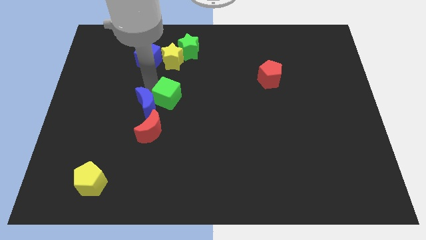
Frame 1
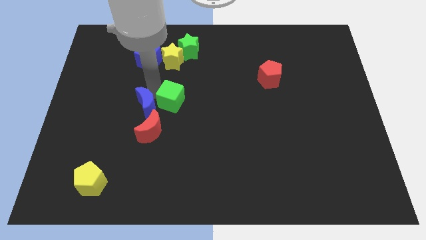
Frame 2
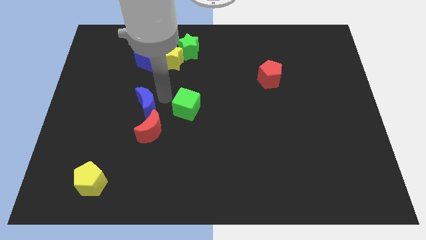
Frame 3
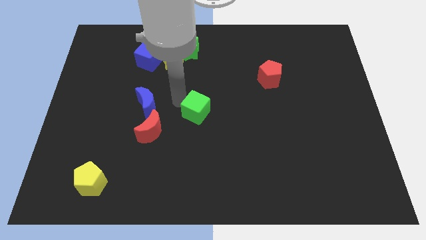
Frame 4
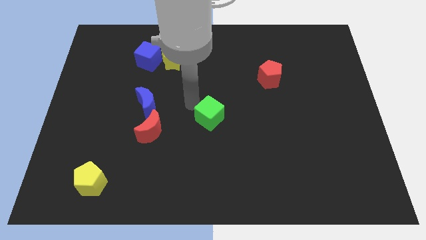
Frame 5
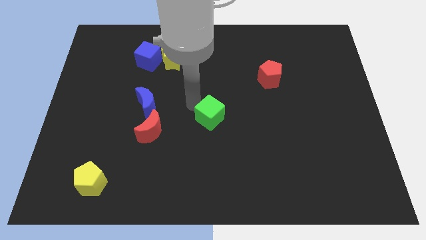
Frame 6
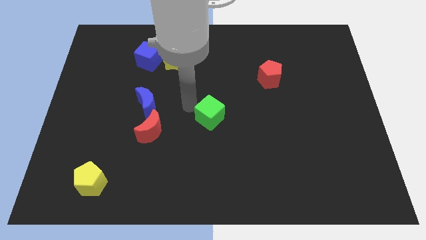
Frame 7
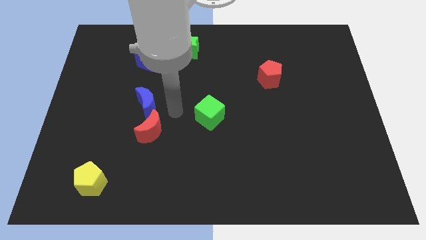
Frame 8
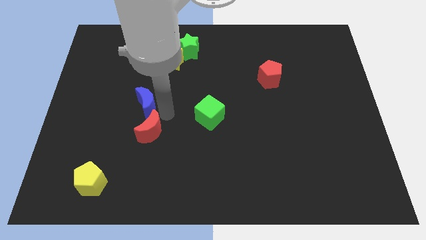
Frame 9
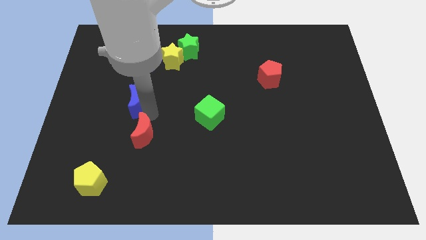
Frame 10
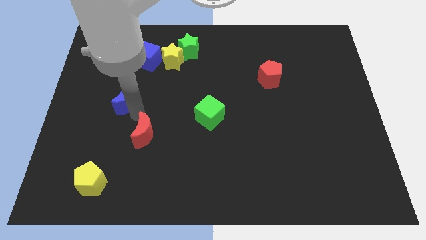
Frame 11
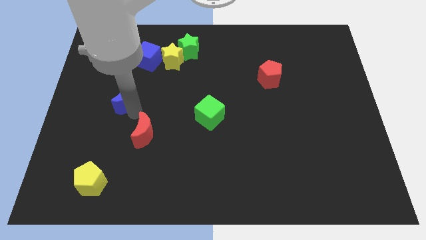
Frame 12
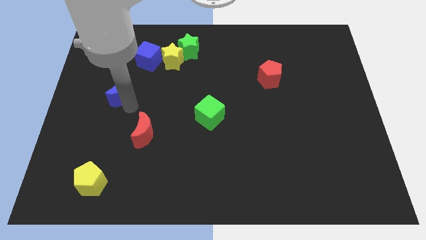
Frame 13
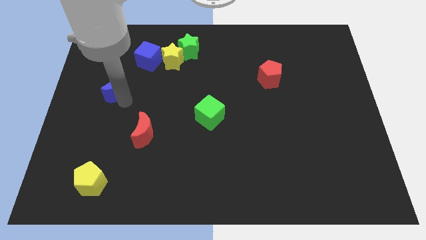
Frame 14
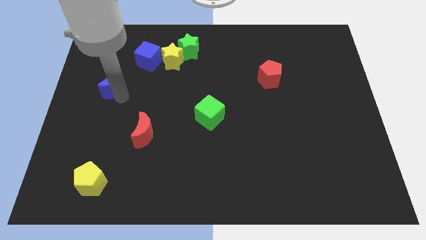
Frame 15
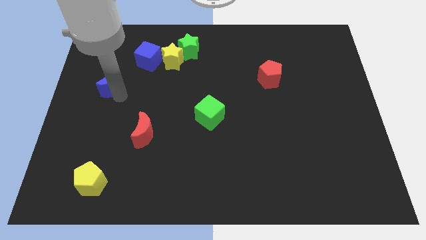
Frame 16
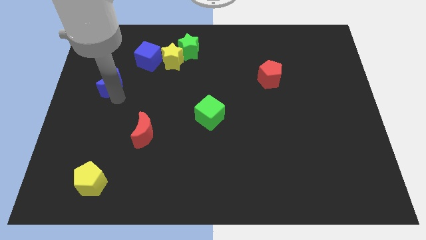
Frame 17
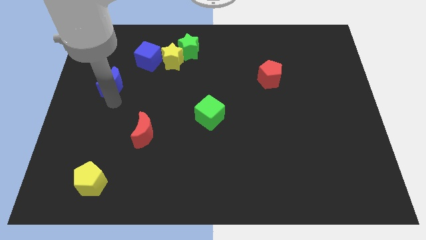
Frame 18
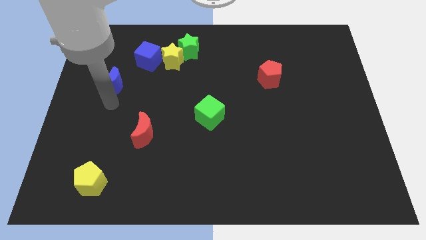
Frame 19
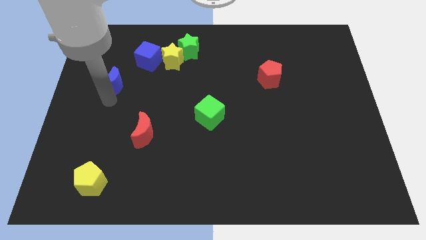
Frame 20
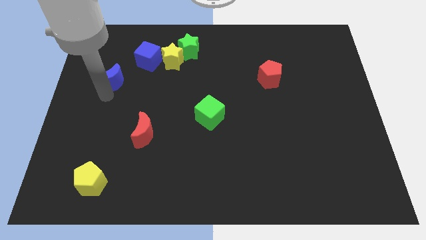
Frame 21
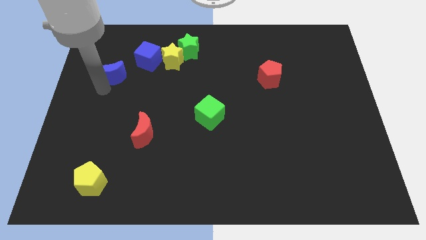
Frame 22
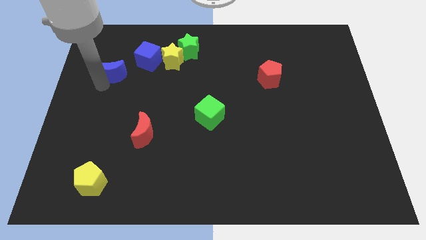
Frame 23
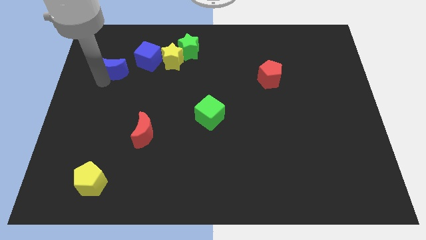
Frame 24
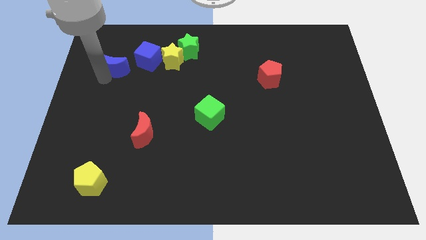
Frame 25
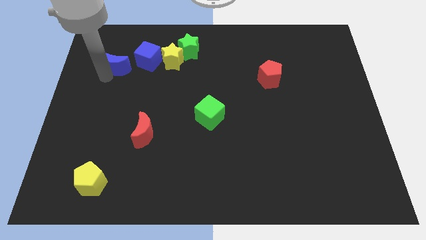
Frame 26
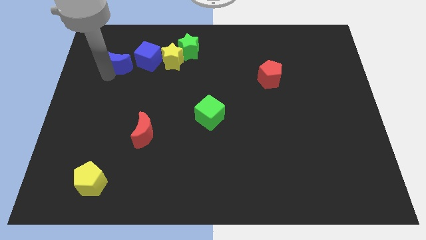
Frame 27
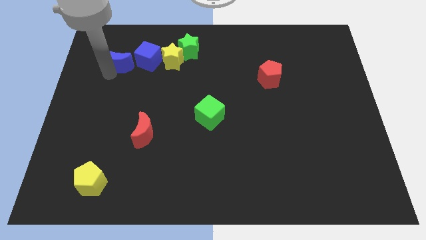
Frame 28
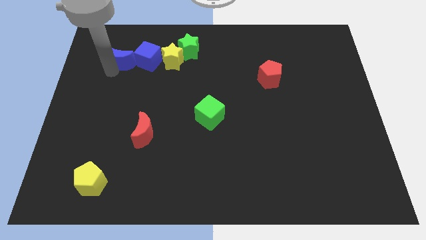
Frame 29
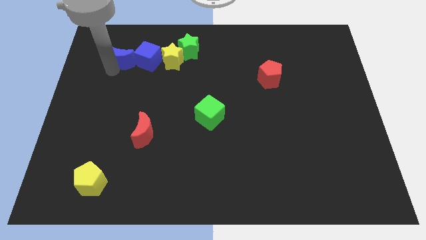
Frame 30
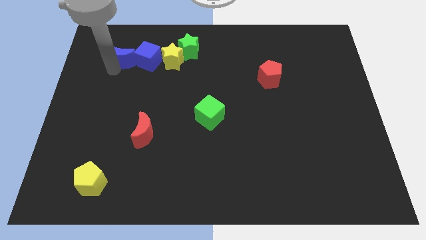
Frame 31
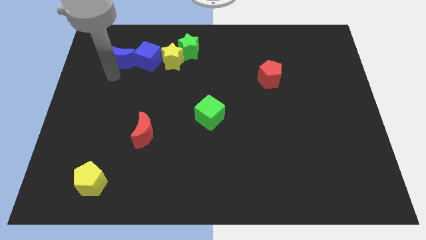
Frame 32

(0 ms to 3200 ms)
place blue crescent beside blue cube

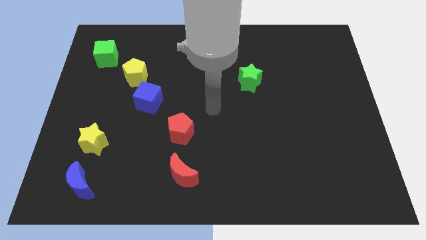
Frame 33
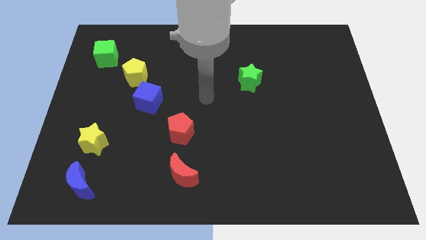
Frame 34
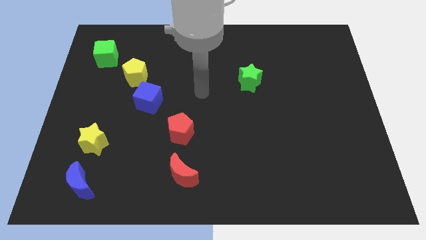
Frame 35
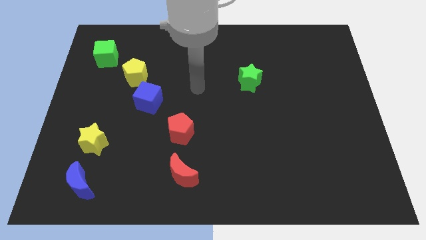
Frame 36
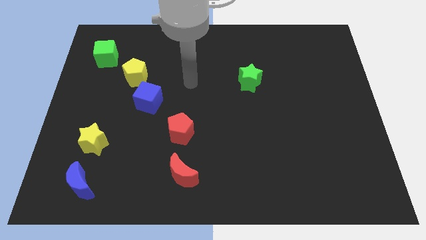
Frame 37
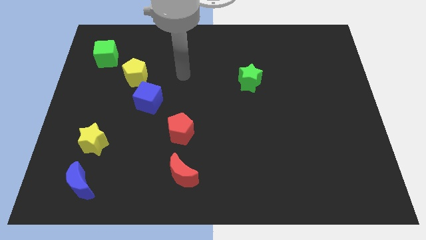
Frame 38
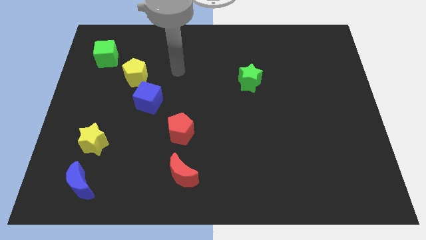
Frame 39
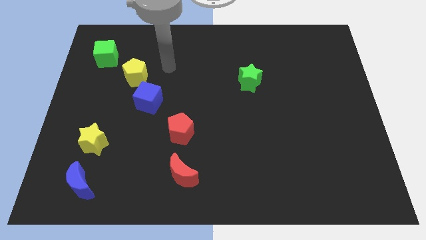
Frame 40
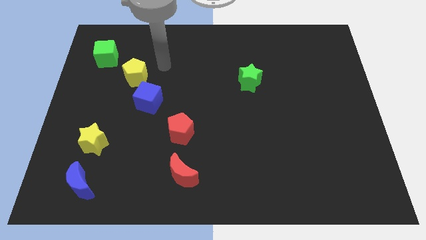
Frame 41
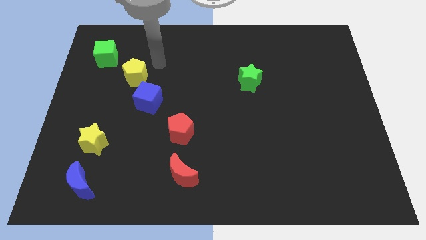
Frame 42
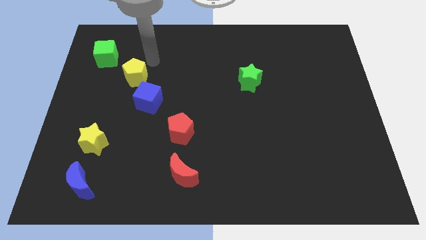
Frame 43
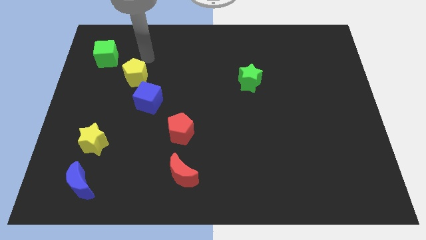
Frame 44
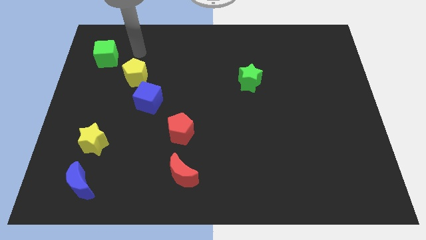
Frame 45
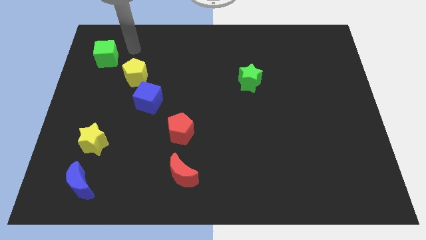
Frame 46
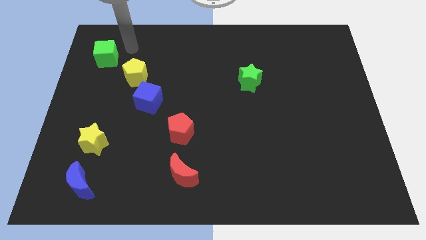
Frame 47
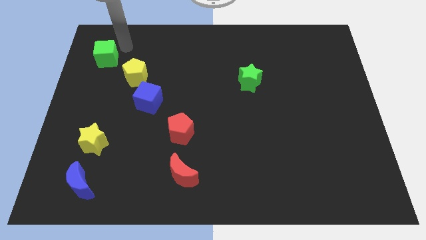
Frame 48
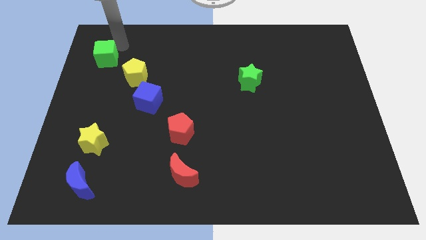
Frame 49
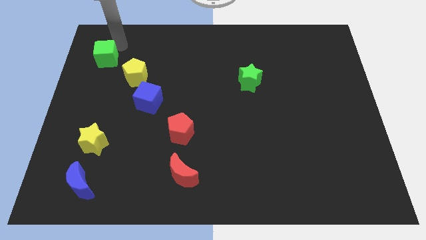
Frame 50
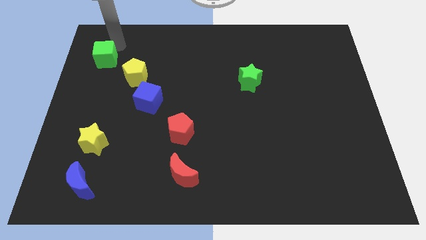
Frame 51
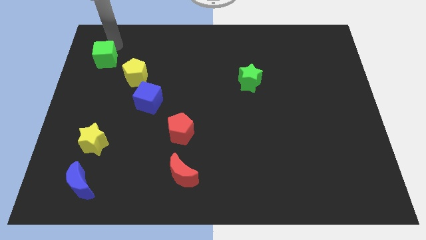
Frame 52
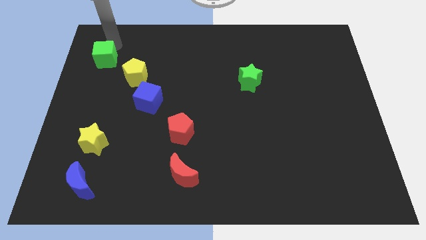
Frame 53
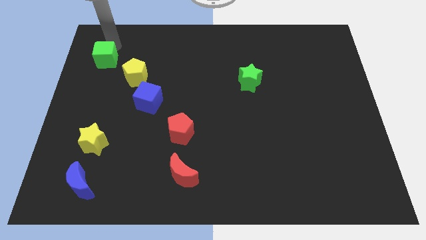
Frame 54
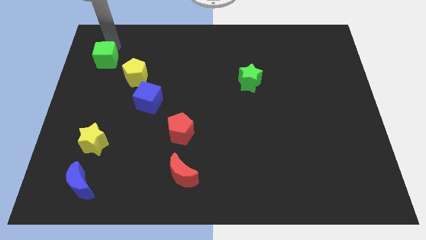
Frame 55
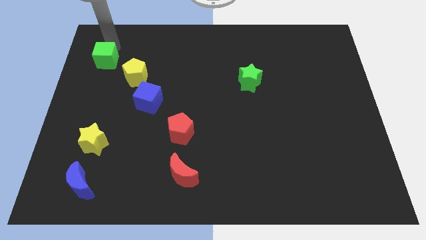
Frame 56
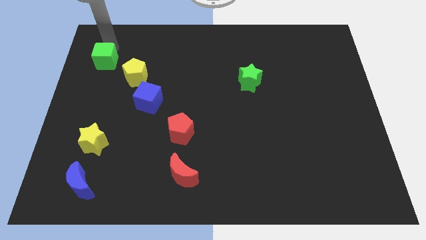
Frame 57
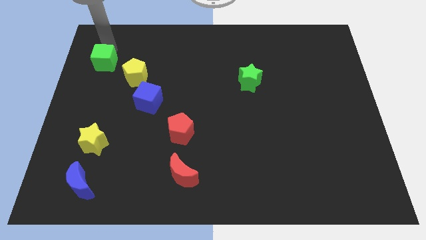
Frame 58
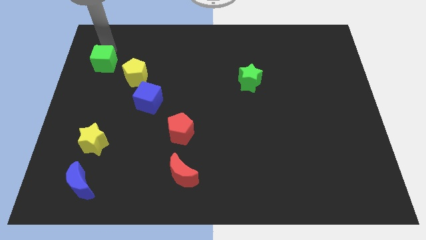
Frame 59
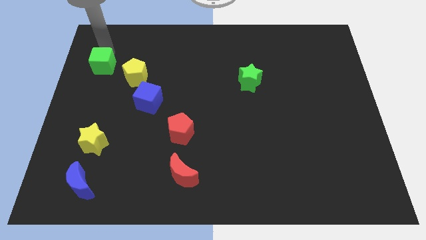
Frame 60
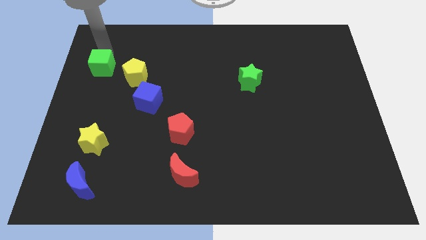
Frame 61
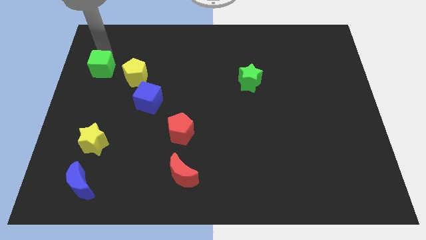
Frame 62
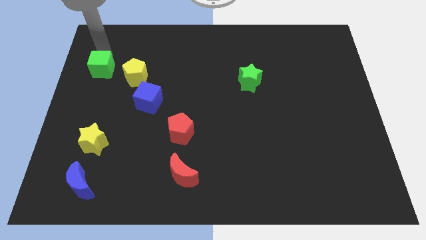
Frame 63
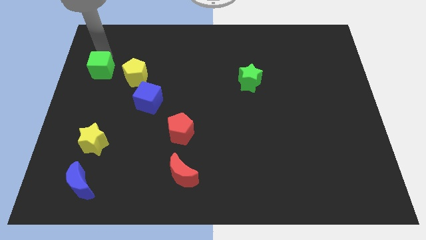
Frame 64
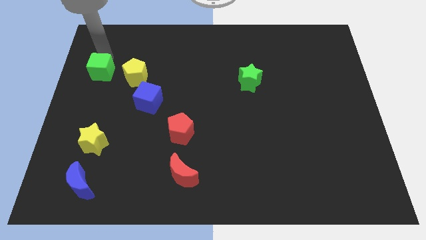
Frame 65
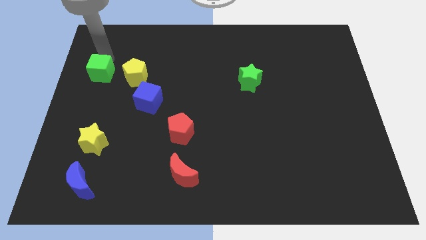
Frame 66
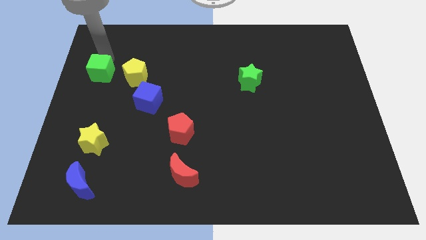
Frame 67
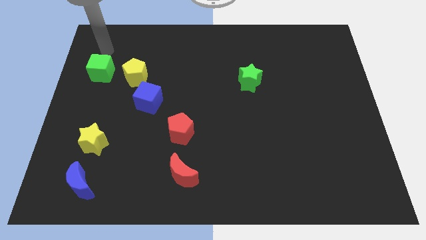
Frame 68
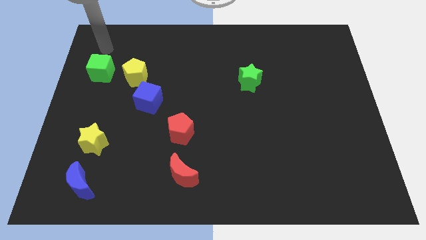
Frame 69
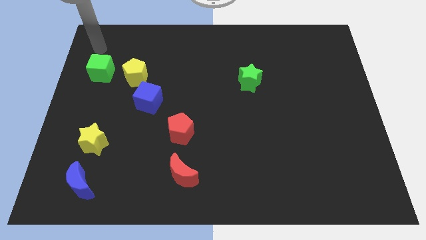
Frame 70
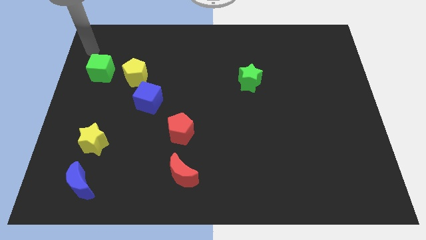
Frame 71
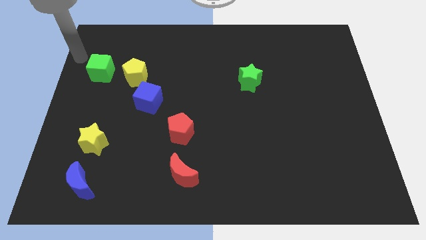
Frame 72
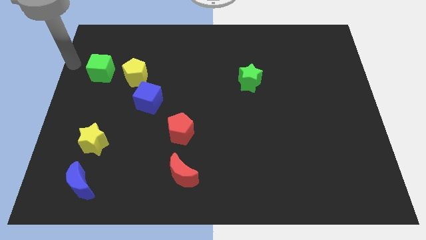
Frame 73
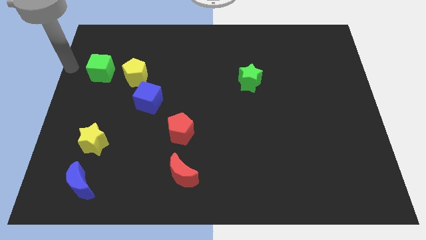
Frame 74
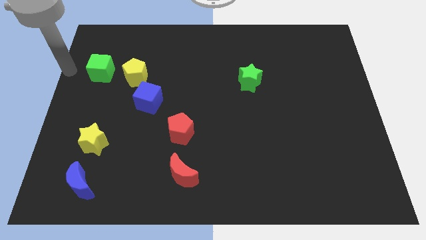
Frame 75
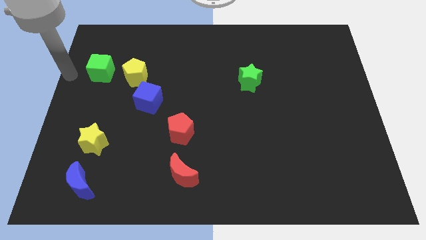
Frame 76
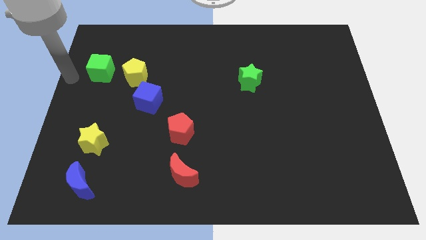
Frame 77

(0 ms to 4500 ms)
move the green cube to the left side of the yellow pentagon

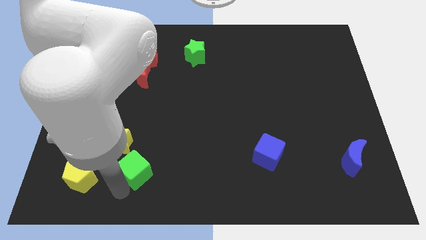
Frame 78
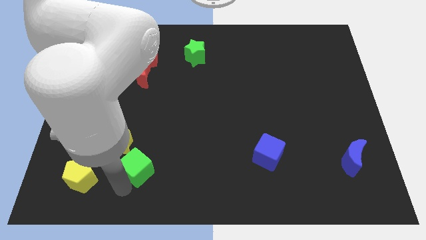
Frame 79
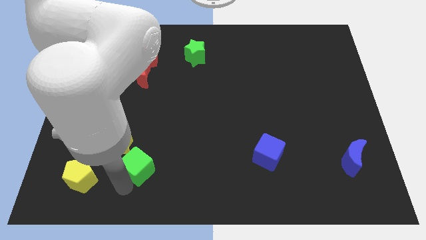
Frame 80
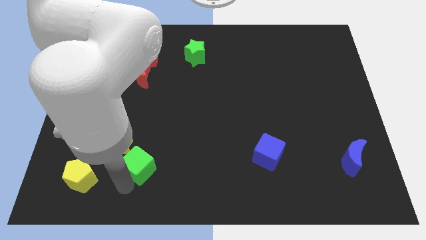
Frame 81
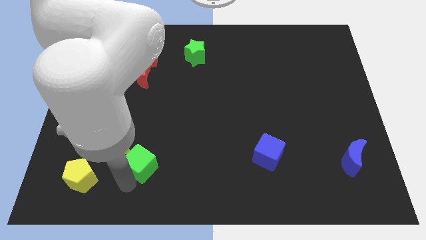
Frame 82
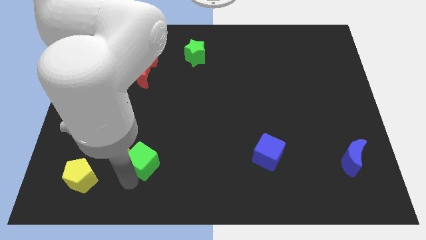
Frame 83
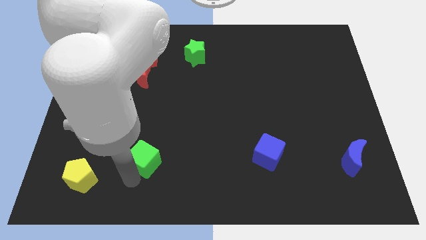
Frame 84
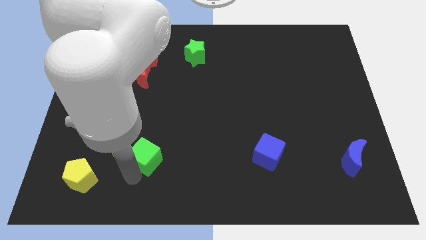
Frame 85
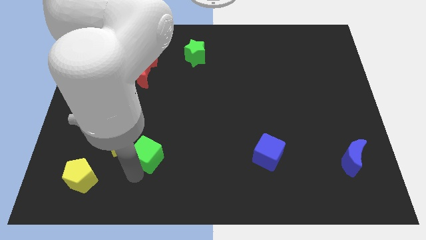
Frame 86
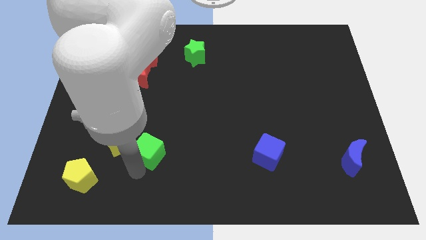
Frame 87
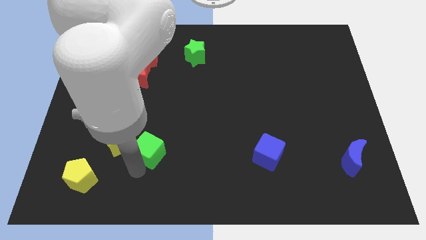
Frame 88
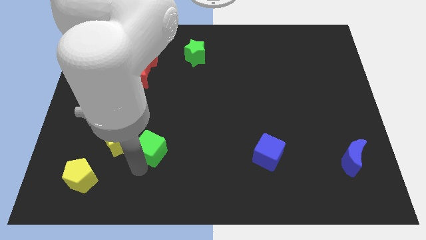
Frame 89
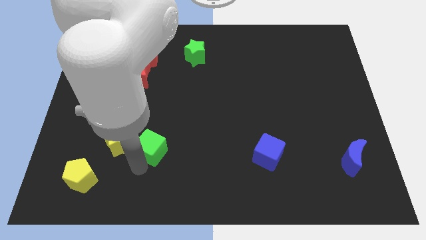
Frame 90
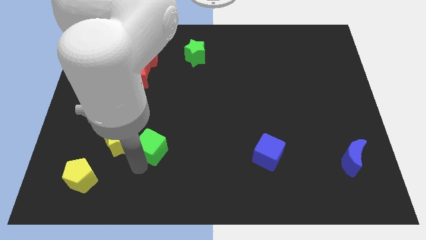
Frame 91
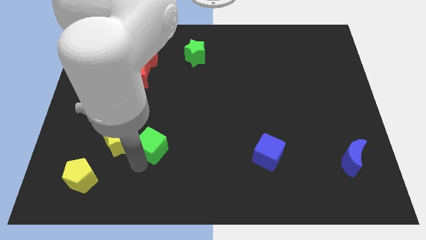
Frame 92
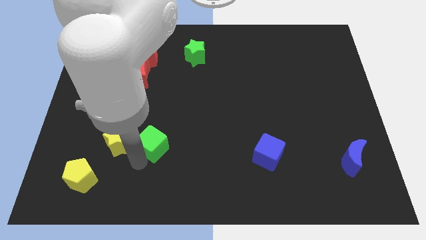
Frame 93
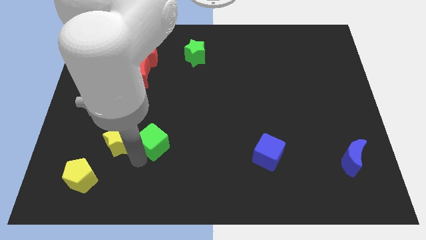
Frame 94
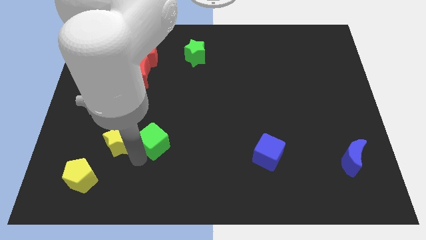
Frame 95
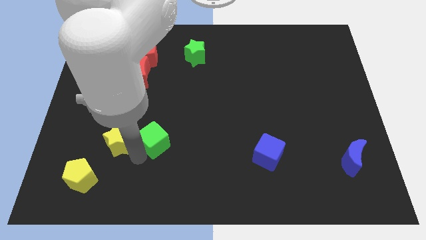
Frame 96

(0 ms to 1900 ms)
place the green cube to the right side of the yellow star
